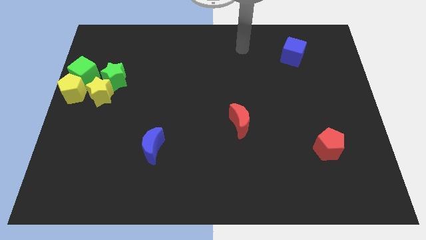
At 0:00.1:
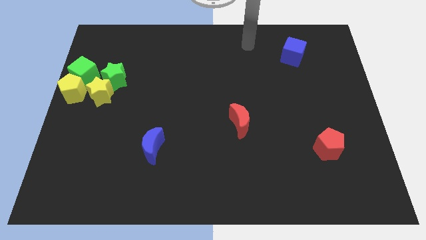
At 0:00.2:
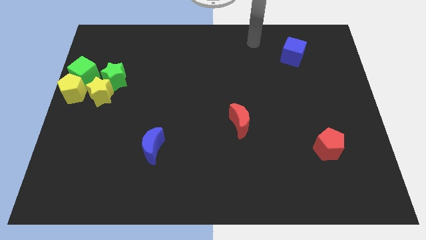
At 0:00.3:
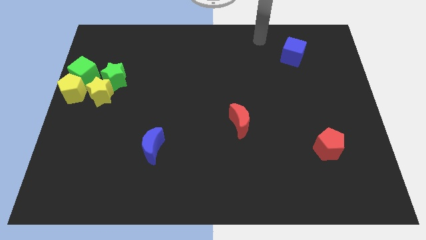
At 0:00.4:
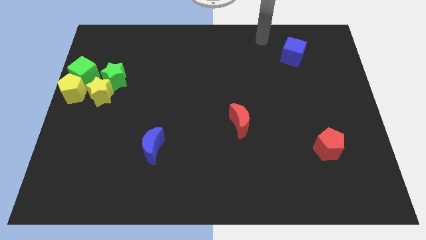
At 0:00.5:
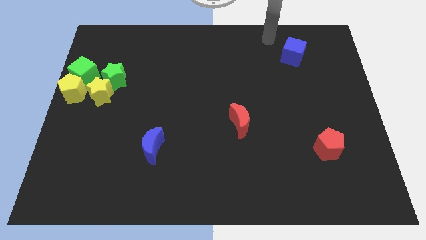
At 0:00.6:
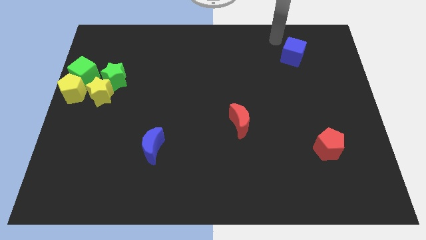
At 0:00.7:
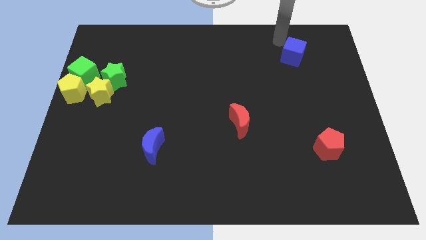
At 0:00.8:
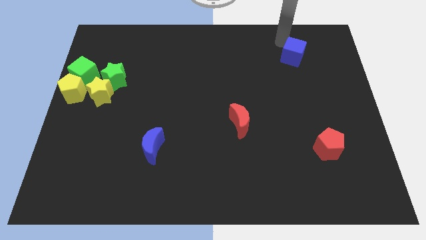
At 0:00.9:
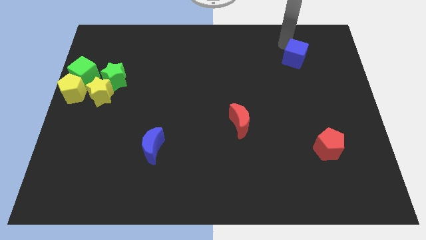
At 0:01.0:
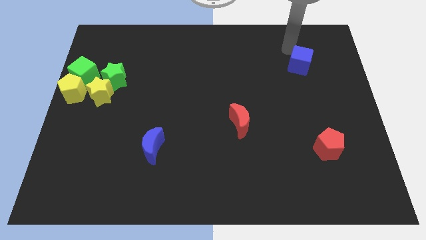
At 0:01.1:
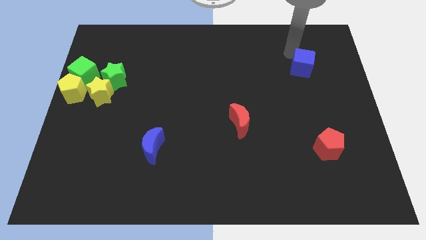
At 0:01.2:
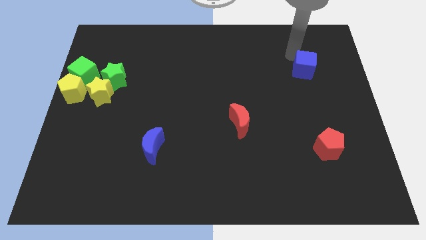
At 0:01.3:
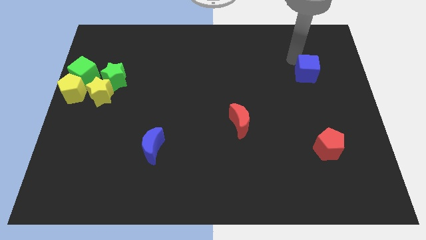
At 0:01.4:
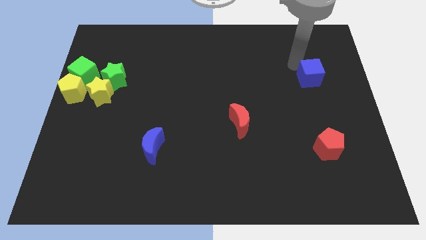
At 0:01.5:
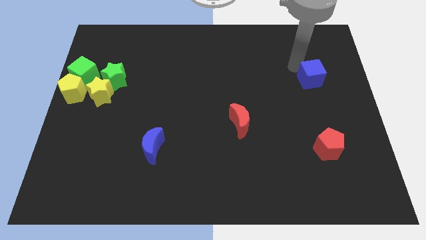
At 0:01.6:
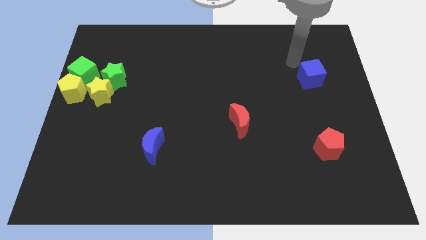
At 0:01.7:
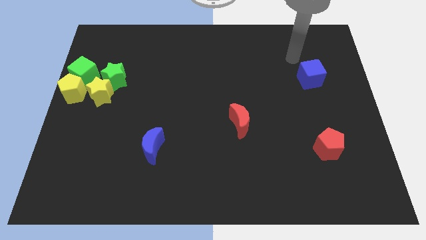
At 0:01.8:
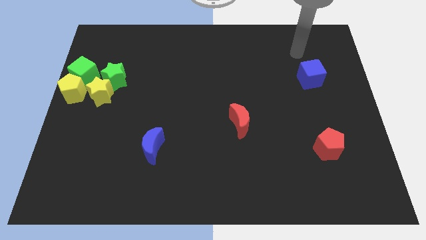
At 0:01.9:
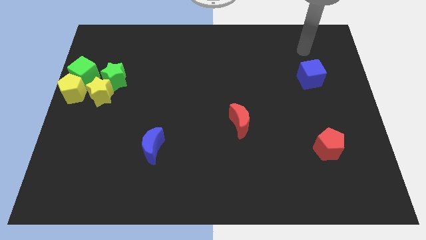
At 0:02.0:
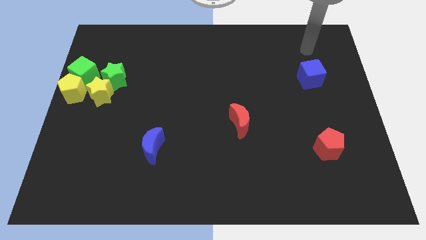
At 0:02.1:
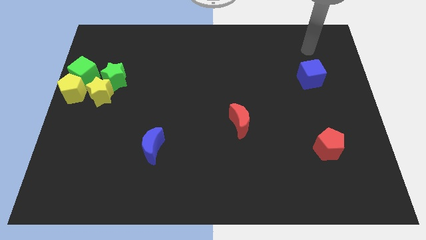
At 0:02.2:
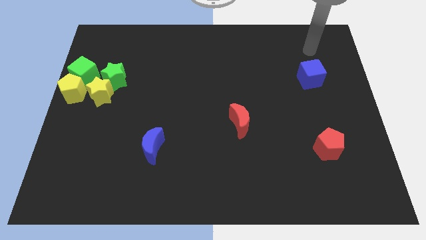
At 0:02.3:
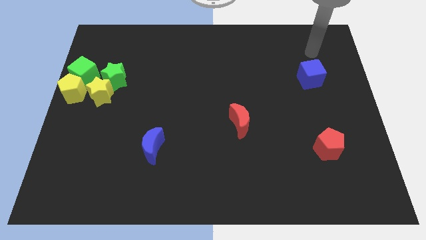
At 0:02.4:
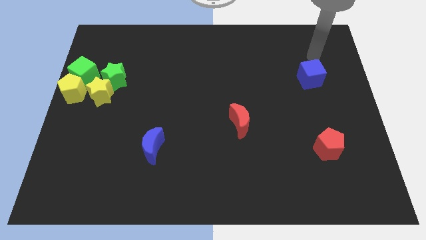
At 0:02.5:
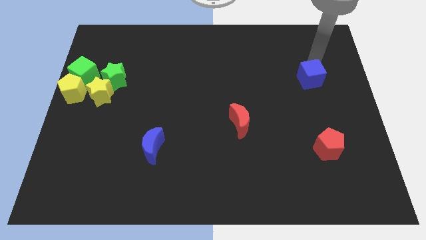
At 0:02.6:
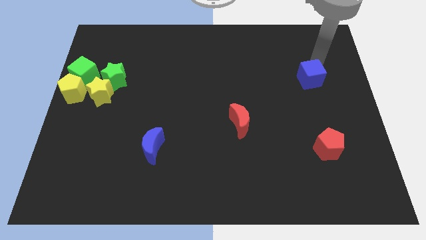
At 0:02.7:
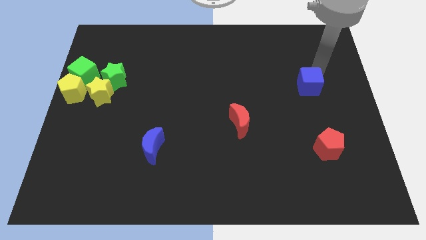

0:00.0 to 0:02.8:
move the blue cube above the red pentagon

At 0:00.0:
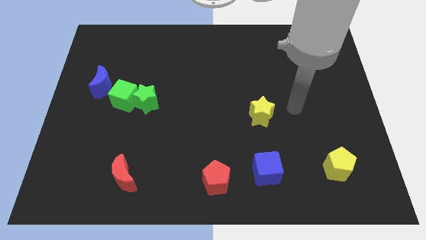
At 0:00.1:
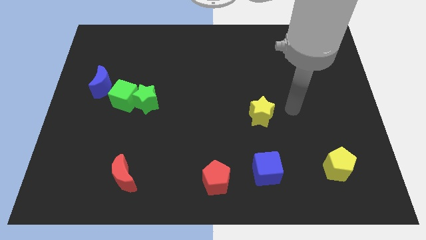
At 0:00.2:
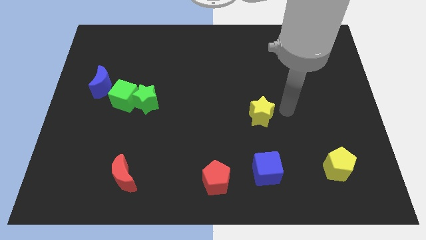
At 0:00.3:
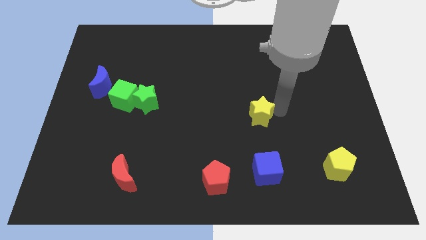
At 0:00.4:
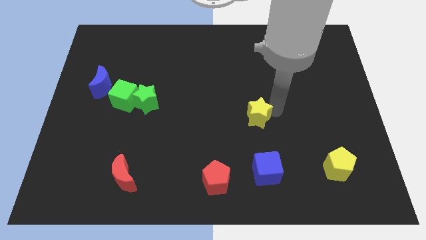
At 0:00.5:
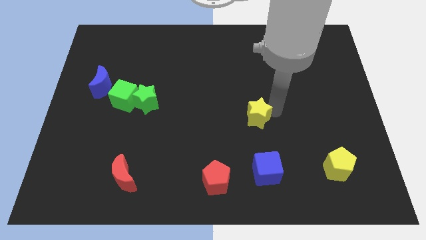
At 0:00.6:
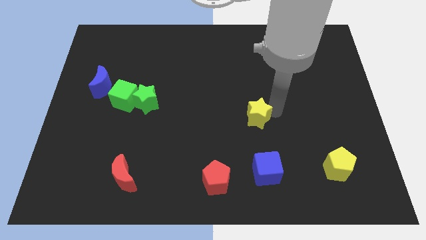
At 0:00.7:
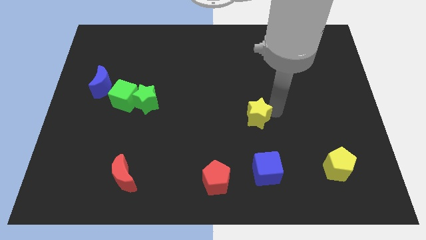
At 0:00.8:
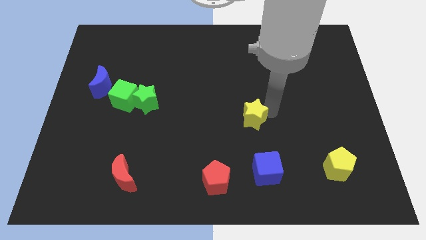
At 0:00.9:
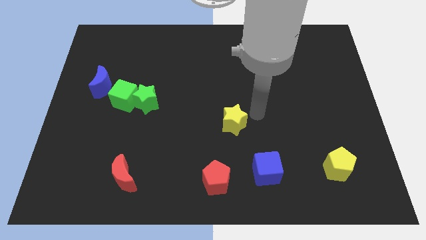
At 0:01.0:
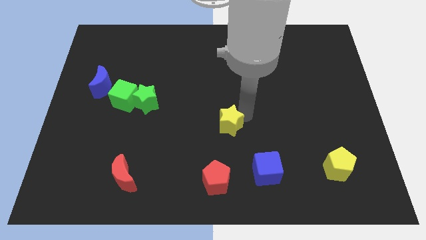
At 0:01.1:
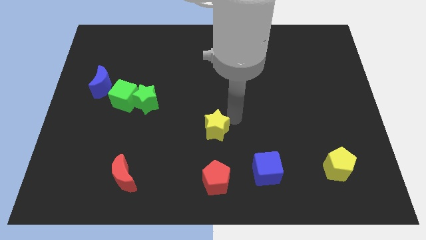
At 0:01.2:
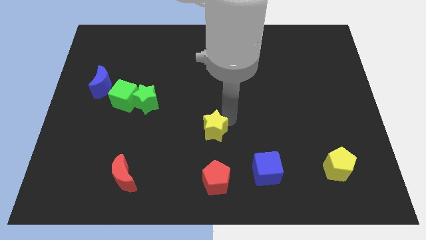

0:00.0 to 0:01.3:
push the yellow star on top of red pentagon

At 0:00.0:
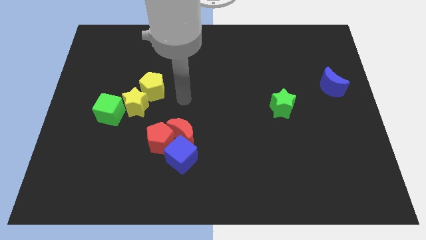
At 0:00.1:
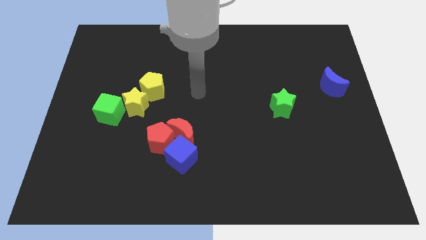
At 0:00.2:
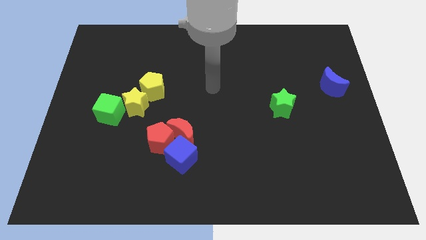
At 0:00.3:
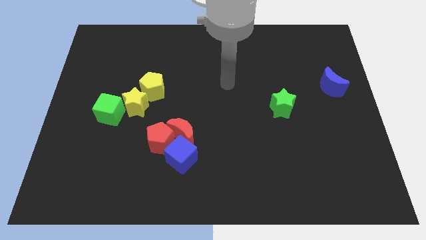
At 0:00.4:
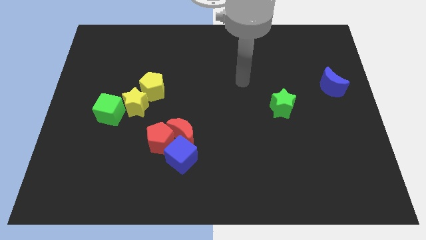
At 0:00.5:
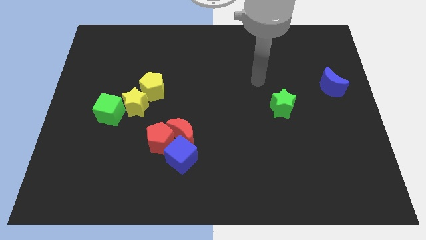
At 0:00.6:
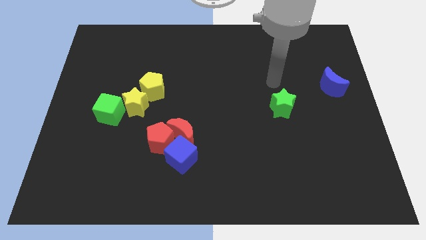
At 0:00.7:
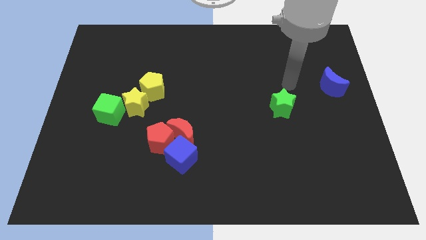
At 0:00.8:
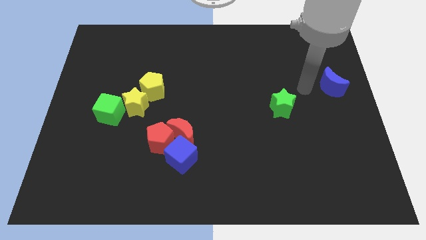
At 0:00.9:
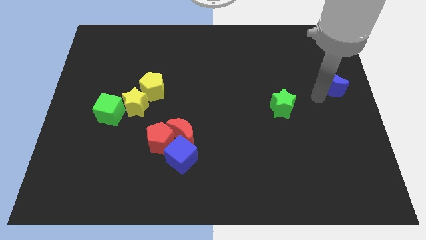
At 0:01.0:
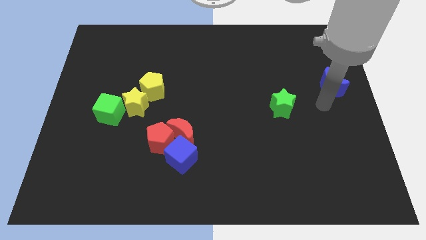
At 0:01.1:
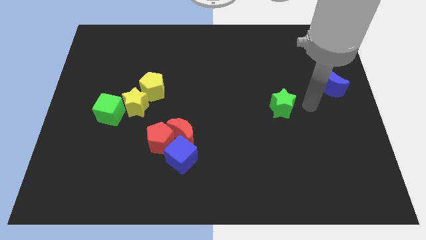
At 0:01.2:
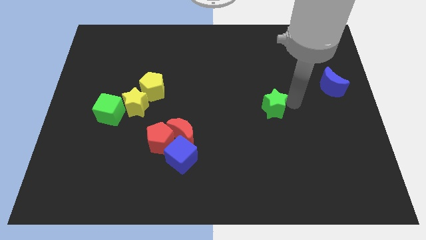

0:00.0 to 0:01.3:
move your arm right to the green star

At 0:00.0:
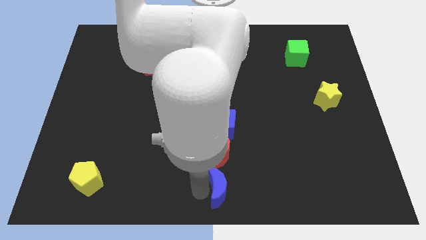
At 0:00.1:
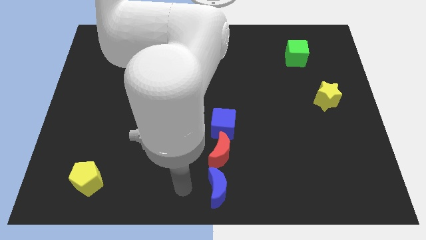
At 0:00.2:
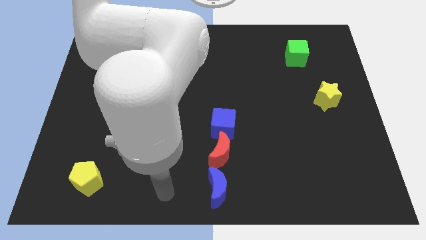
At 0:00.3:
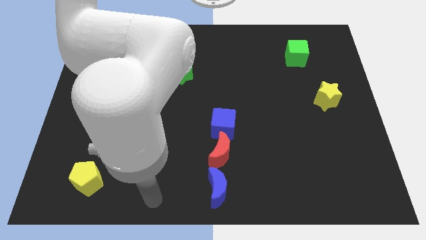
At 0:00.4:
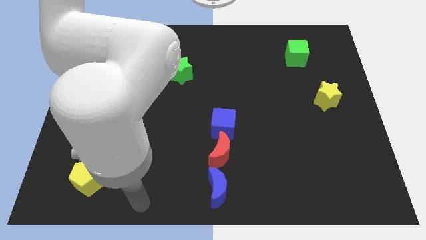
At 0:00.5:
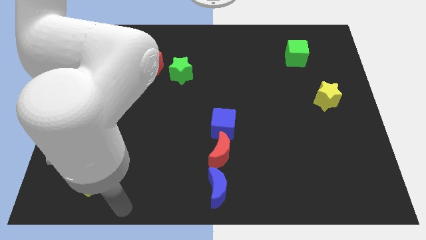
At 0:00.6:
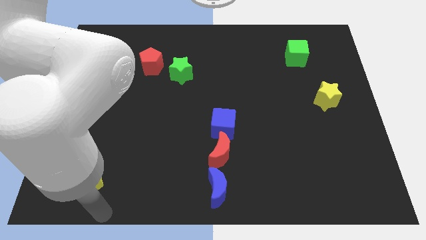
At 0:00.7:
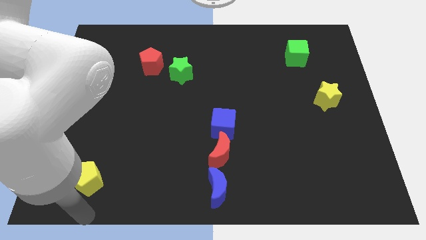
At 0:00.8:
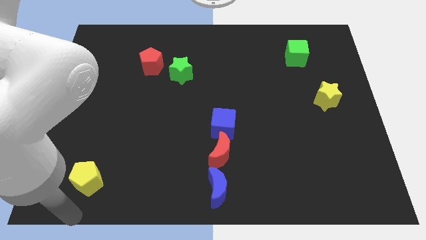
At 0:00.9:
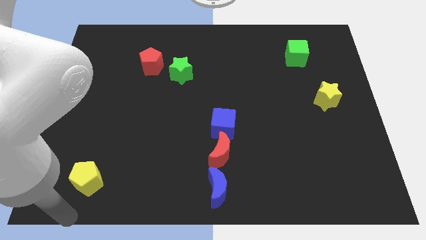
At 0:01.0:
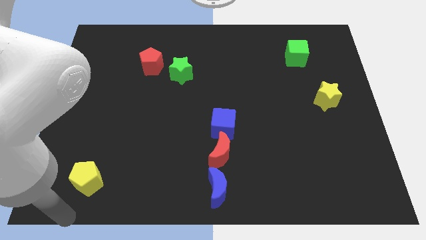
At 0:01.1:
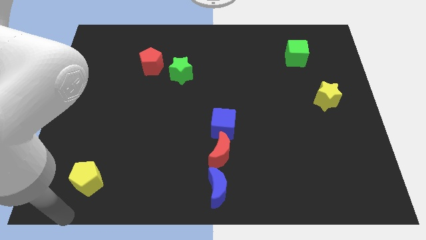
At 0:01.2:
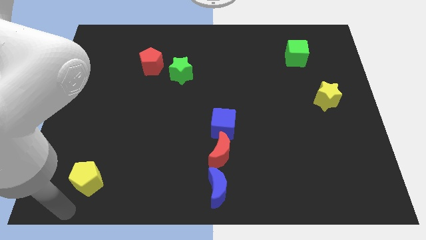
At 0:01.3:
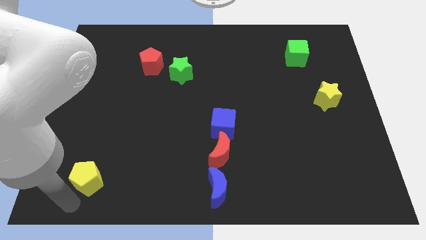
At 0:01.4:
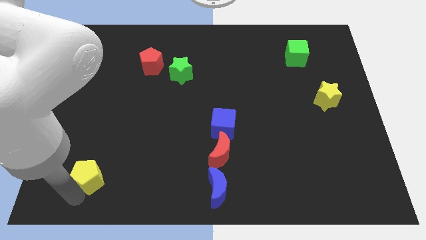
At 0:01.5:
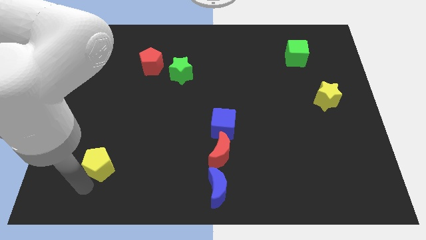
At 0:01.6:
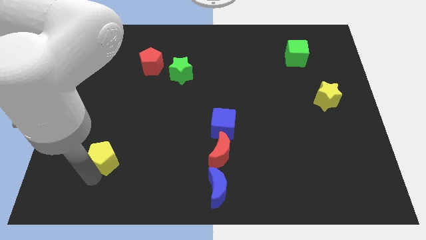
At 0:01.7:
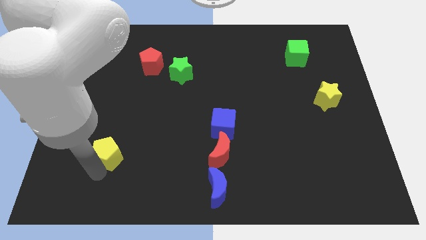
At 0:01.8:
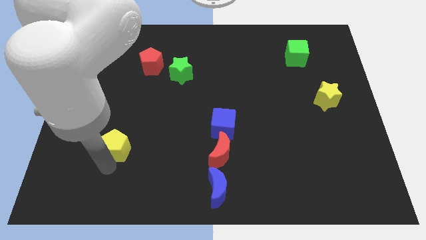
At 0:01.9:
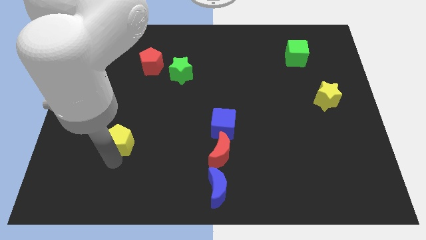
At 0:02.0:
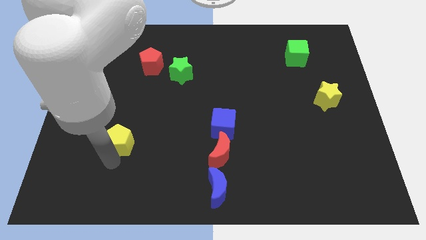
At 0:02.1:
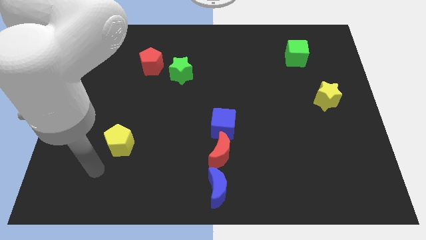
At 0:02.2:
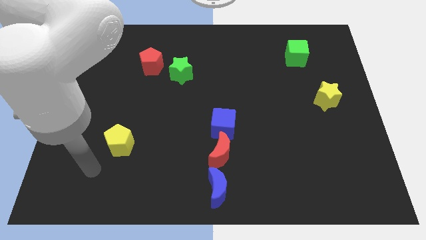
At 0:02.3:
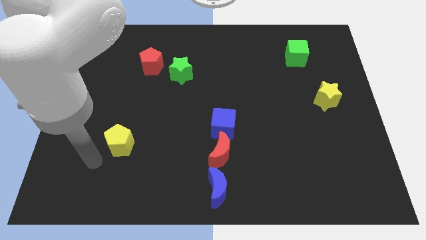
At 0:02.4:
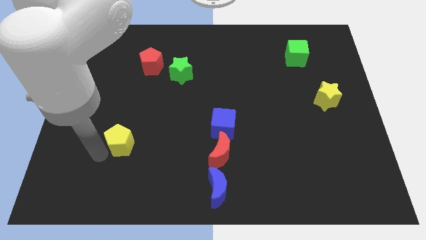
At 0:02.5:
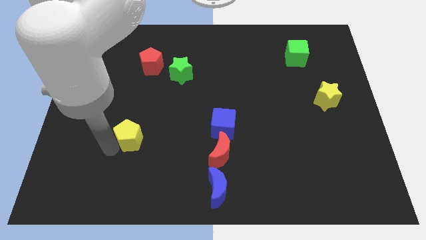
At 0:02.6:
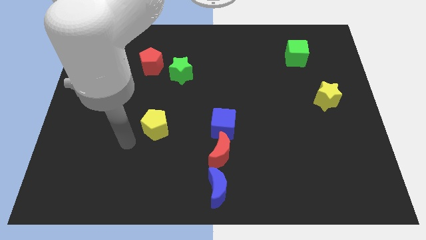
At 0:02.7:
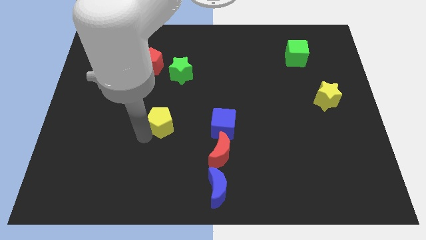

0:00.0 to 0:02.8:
place the yellow pentagon parallel to blue cube

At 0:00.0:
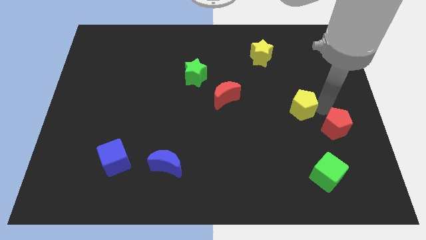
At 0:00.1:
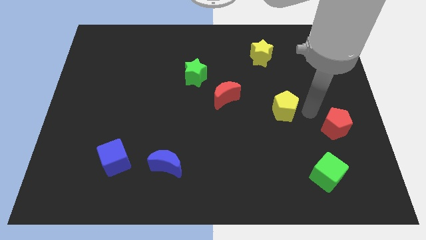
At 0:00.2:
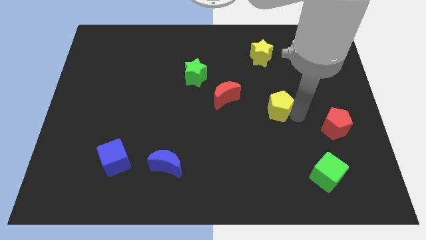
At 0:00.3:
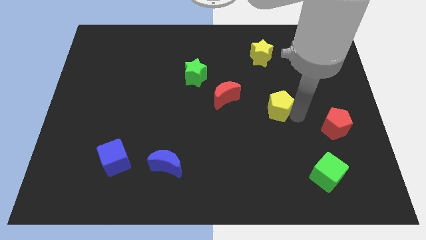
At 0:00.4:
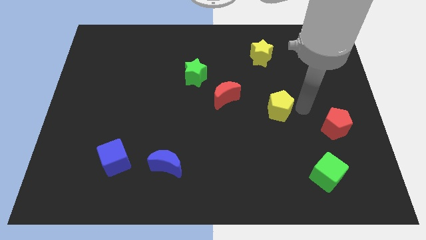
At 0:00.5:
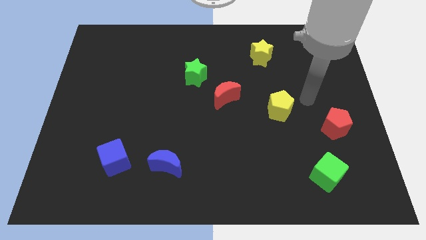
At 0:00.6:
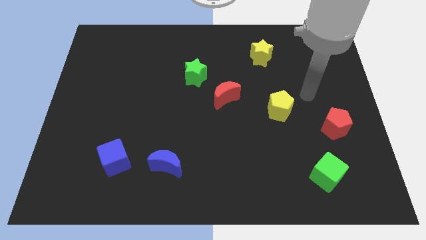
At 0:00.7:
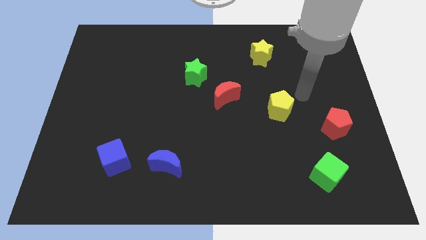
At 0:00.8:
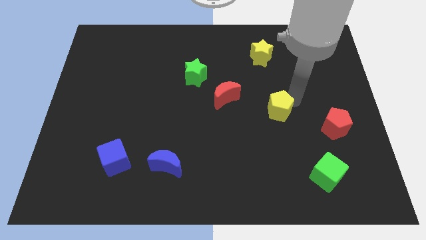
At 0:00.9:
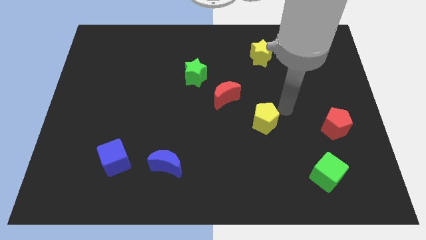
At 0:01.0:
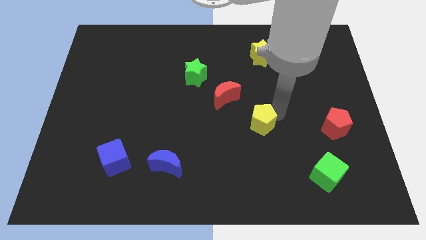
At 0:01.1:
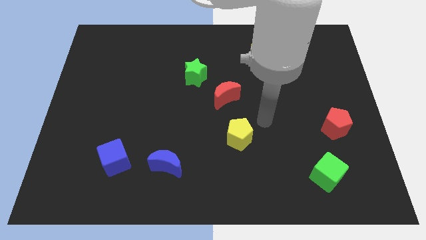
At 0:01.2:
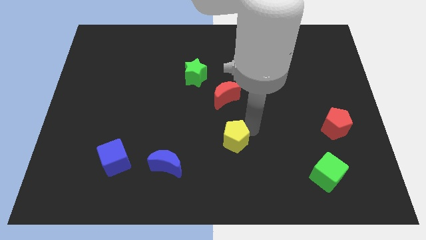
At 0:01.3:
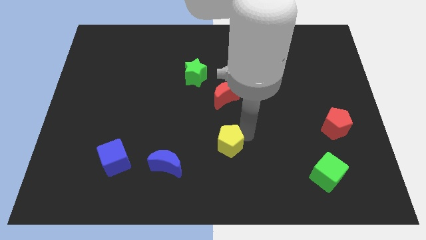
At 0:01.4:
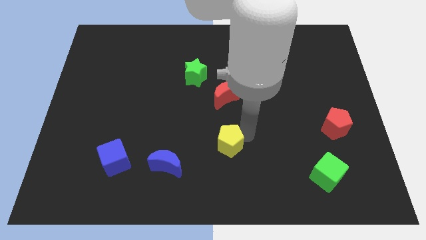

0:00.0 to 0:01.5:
place the yellow pentagon below the red moon
